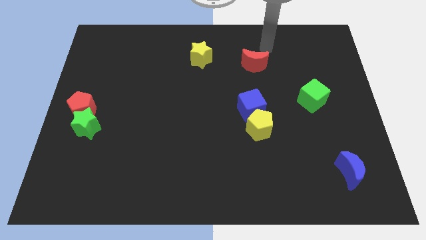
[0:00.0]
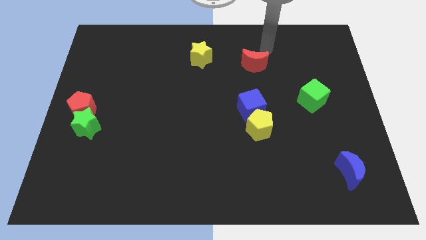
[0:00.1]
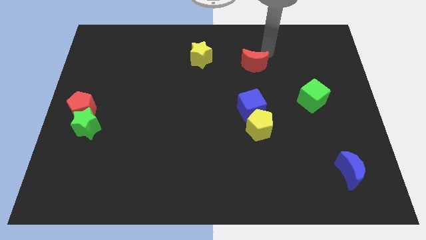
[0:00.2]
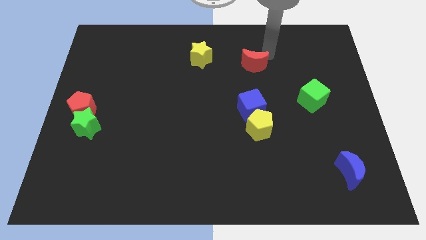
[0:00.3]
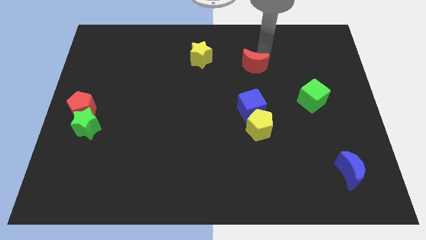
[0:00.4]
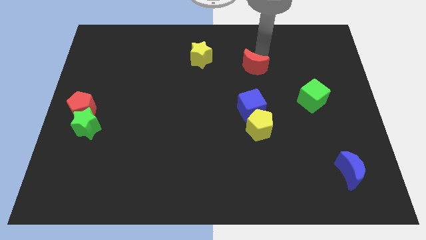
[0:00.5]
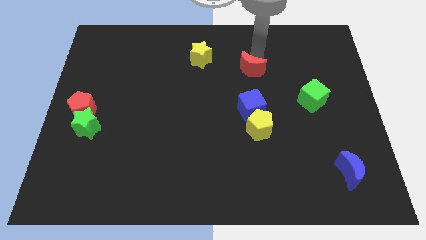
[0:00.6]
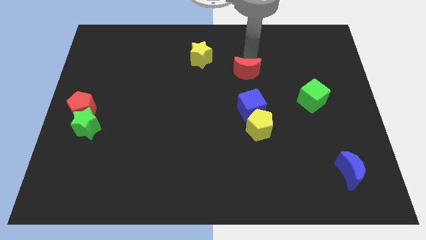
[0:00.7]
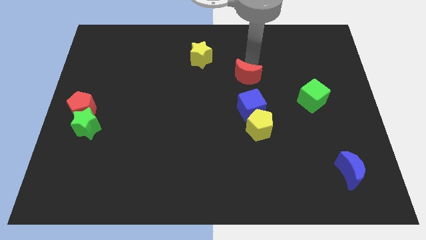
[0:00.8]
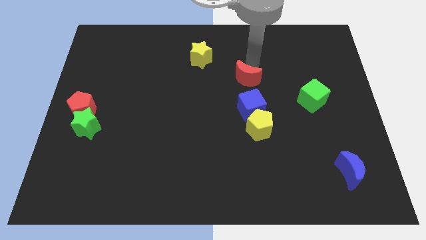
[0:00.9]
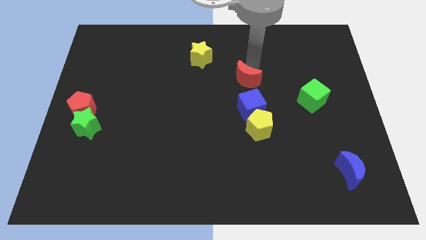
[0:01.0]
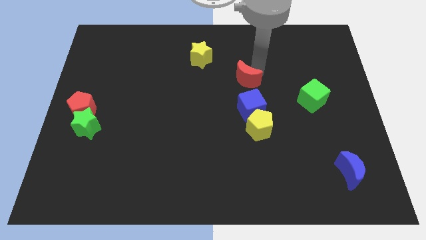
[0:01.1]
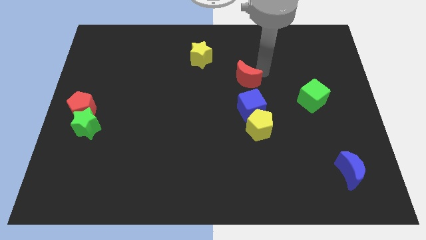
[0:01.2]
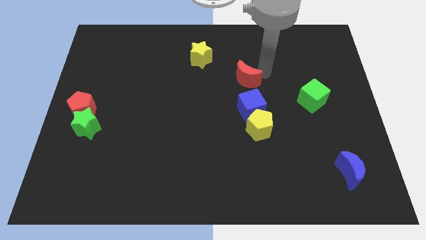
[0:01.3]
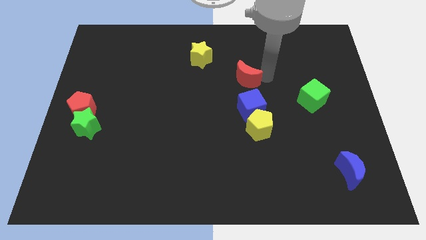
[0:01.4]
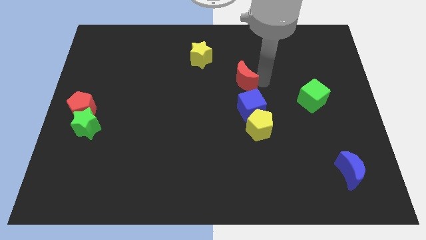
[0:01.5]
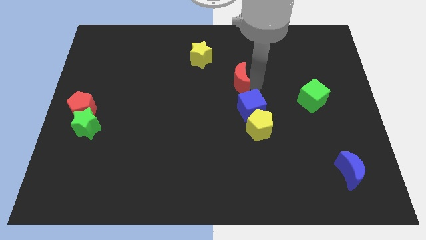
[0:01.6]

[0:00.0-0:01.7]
place the red moon above the blue cube

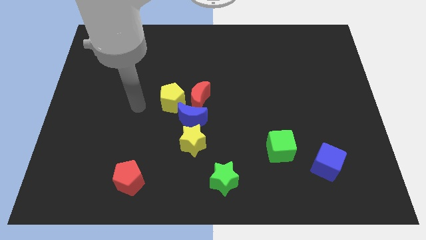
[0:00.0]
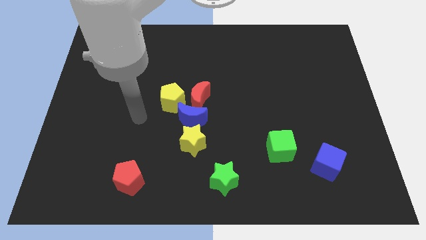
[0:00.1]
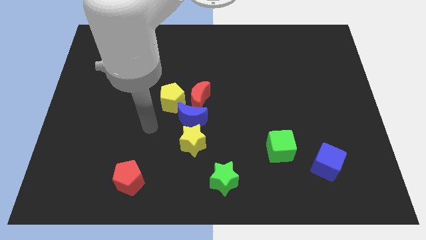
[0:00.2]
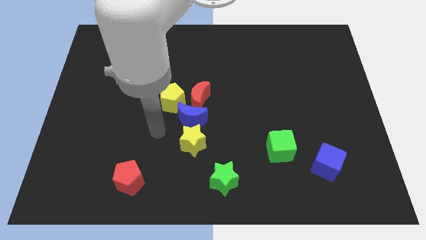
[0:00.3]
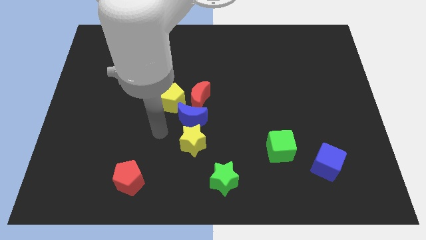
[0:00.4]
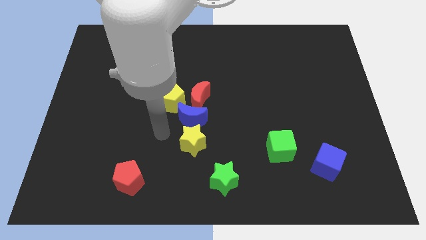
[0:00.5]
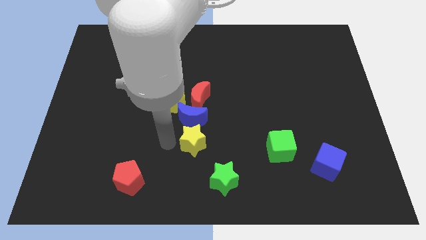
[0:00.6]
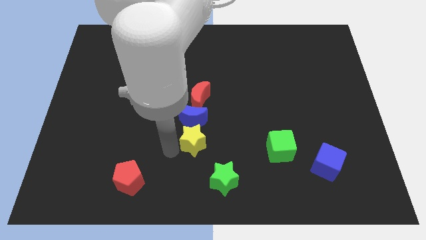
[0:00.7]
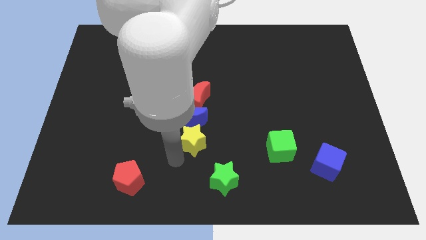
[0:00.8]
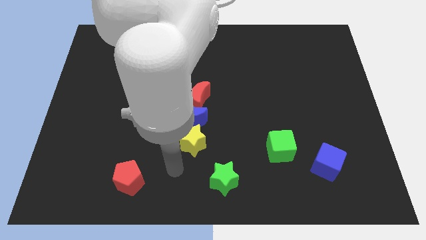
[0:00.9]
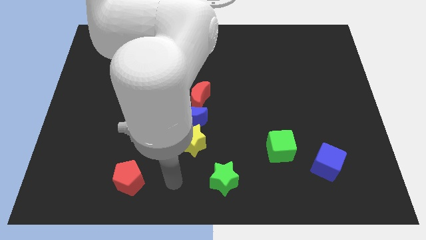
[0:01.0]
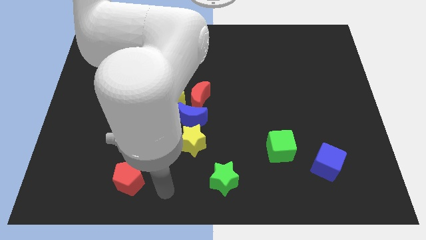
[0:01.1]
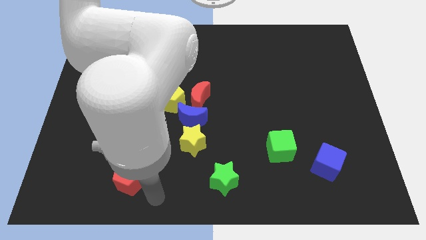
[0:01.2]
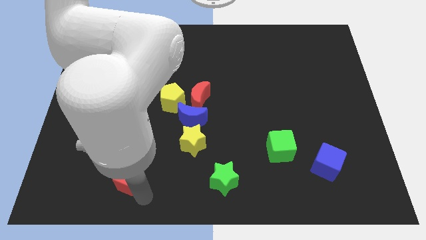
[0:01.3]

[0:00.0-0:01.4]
place your arm to the bottom right side of the red pentagon

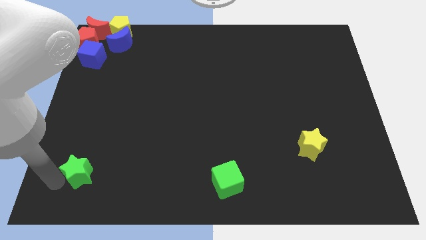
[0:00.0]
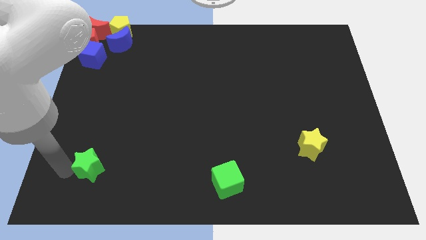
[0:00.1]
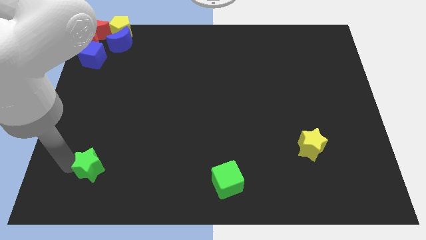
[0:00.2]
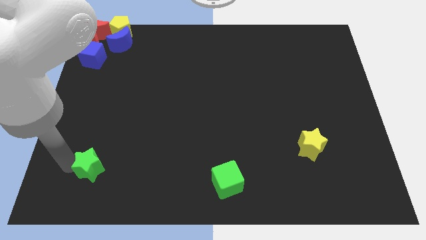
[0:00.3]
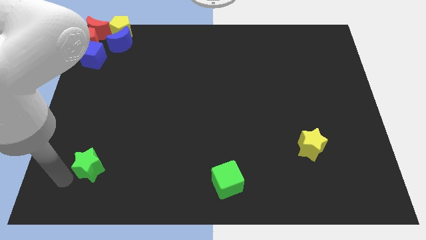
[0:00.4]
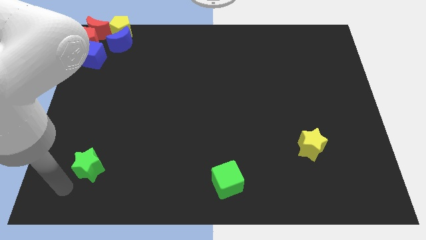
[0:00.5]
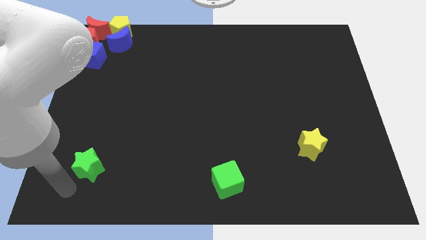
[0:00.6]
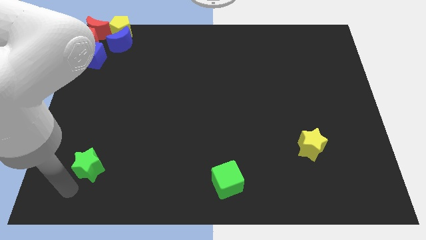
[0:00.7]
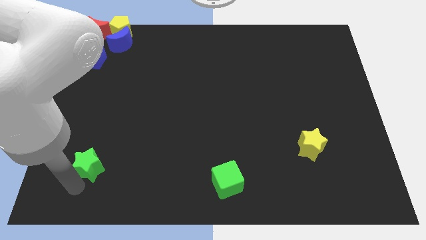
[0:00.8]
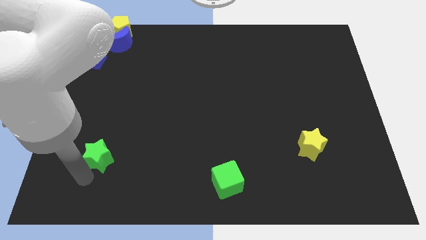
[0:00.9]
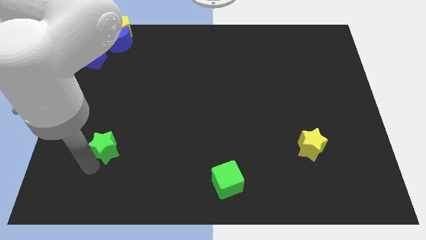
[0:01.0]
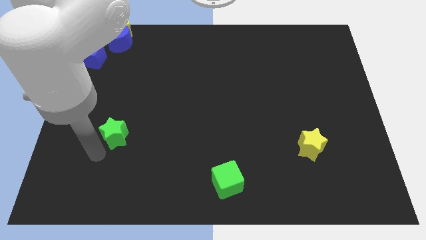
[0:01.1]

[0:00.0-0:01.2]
push the green star slightly upwards

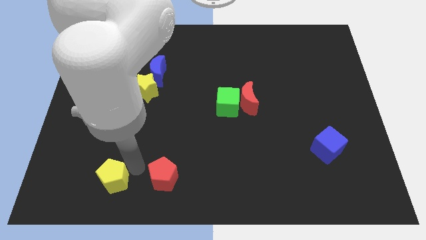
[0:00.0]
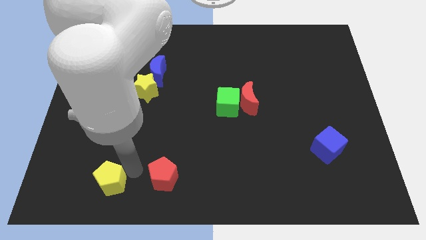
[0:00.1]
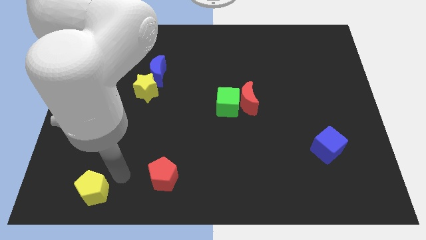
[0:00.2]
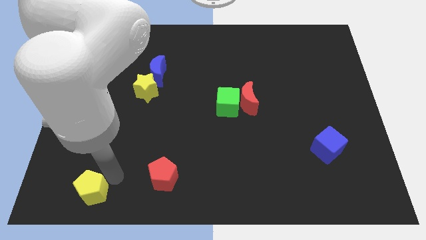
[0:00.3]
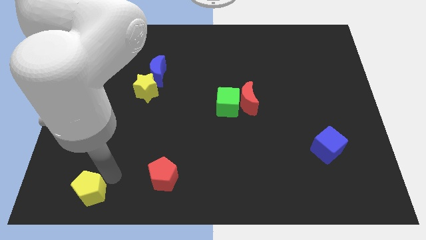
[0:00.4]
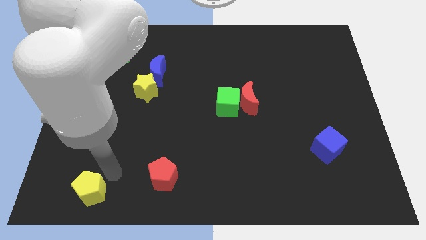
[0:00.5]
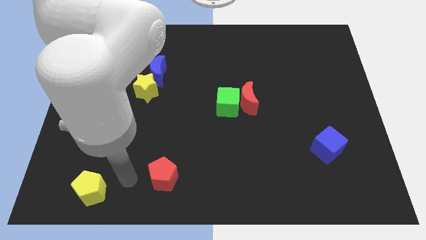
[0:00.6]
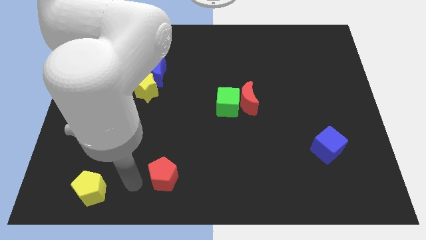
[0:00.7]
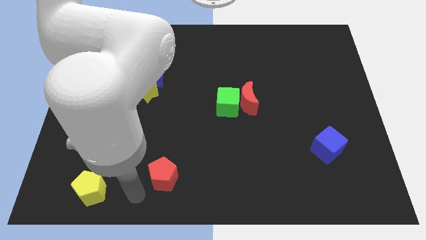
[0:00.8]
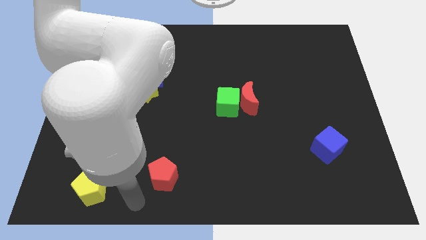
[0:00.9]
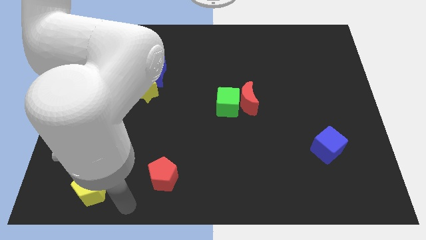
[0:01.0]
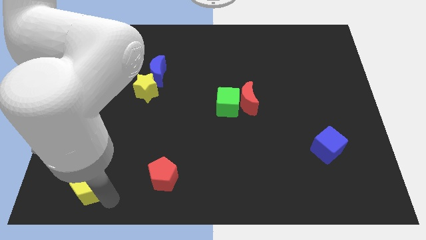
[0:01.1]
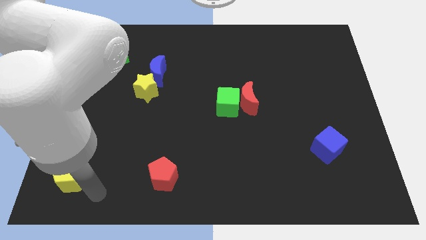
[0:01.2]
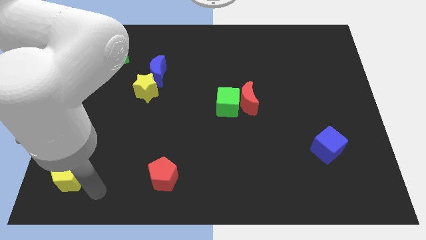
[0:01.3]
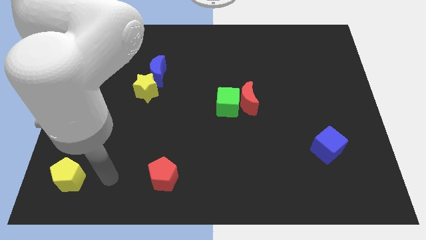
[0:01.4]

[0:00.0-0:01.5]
push the yellow pentagon towards the bottom left of the board

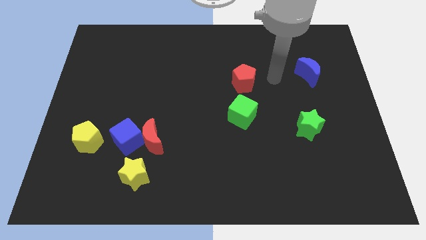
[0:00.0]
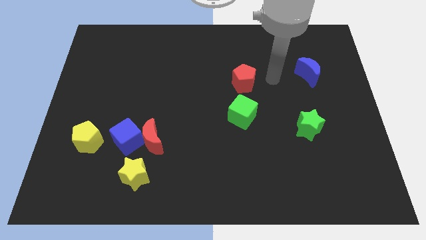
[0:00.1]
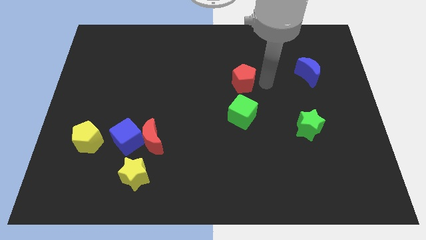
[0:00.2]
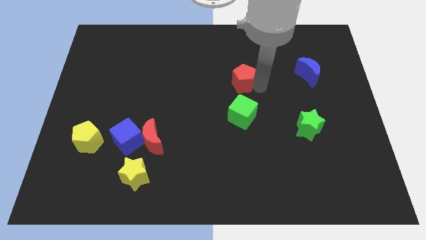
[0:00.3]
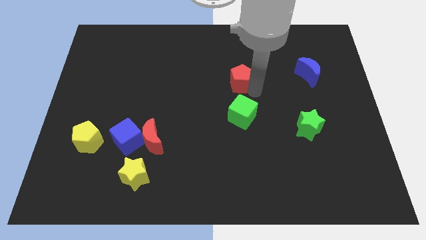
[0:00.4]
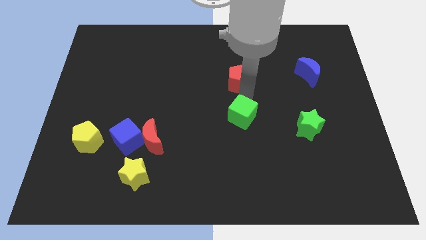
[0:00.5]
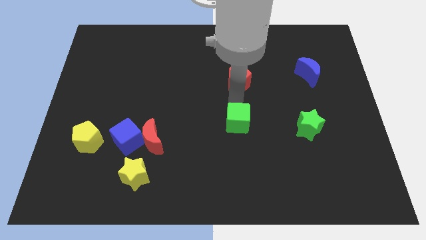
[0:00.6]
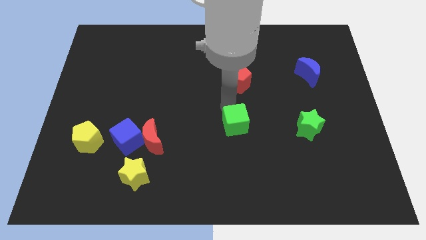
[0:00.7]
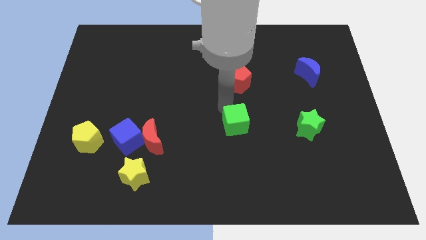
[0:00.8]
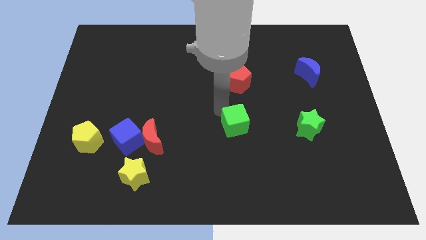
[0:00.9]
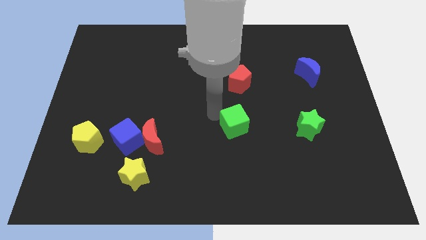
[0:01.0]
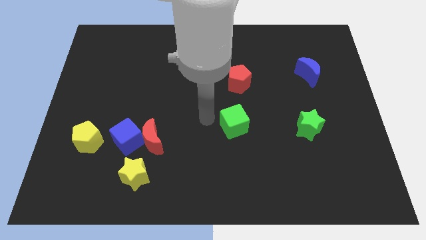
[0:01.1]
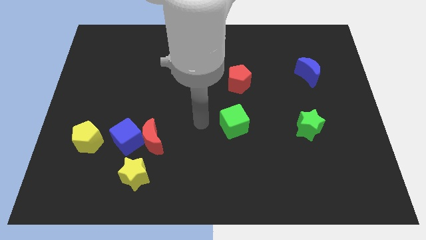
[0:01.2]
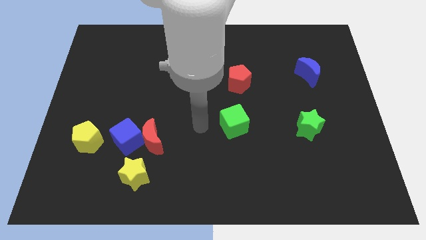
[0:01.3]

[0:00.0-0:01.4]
slightly push the red pentagon on the board

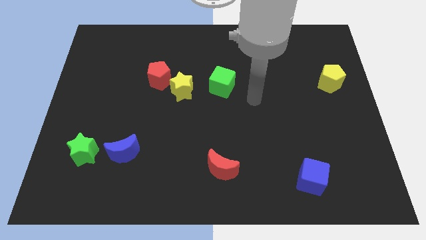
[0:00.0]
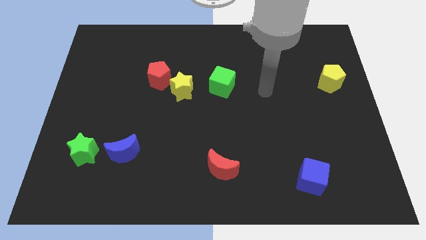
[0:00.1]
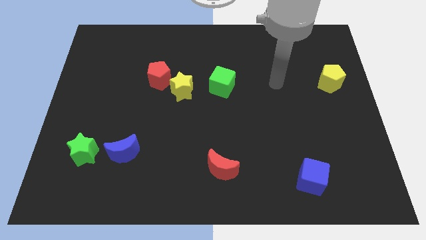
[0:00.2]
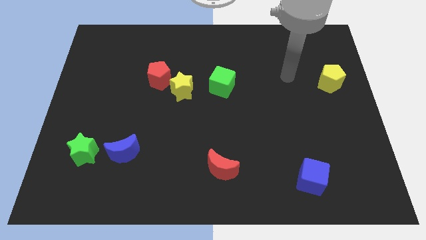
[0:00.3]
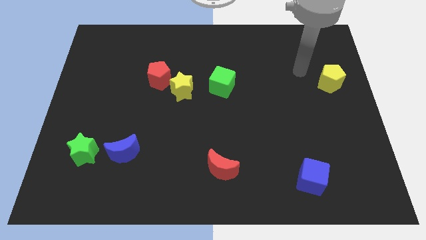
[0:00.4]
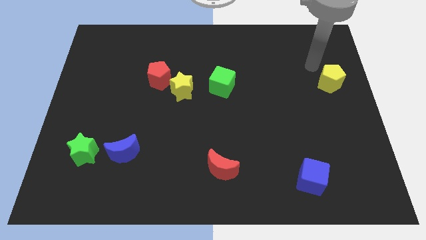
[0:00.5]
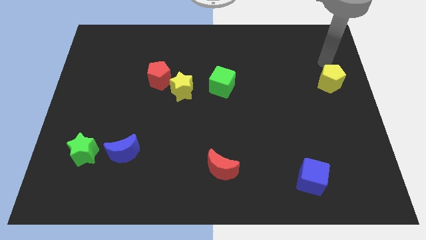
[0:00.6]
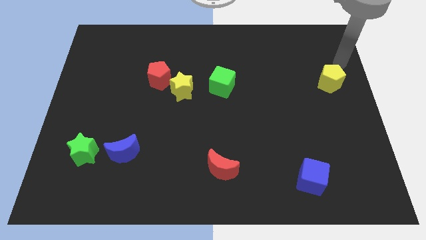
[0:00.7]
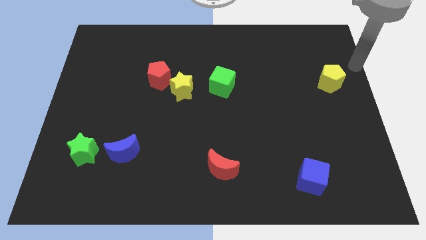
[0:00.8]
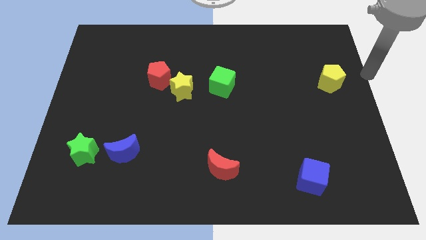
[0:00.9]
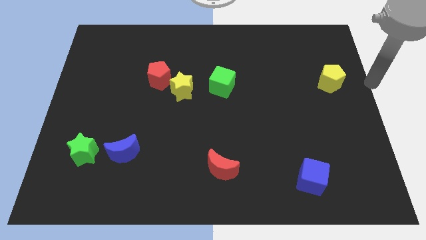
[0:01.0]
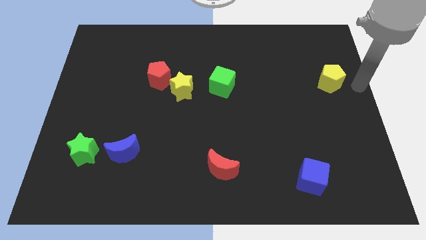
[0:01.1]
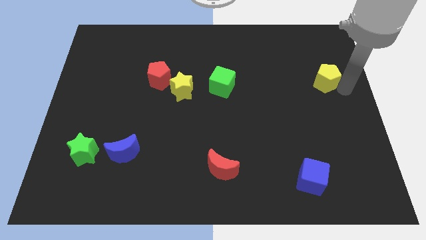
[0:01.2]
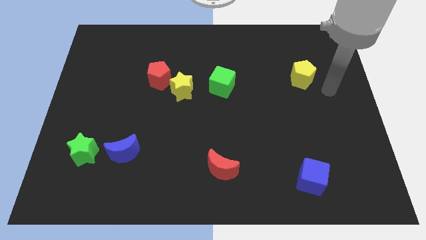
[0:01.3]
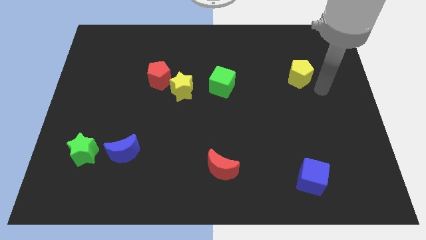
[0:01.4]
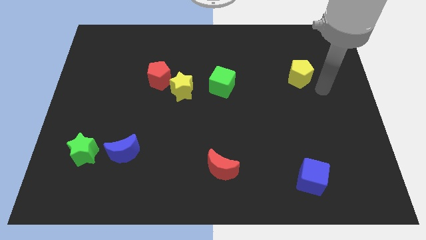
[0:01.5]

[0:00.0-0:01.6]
move your arm towards the right of the board

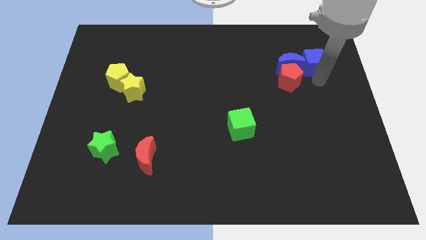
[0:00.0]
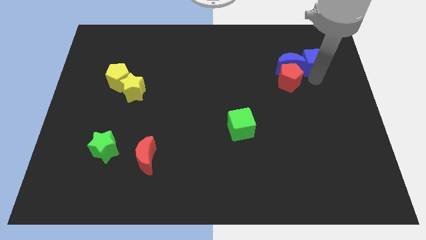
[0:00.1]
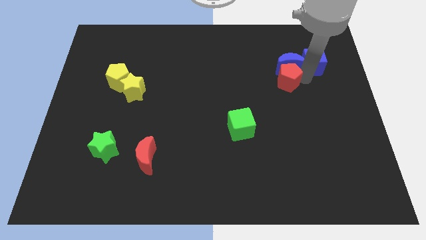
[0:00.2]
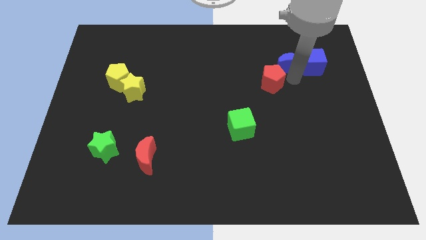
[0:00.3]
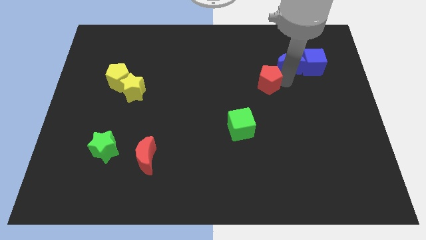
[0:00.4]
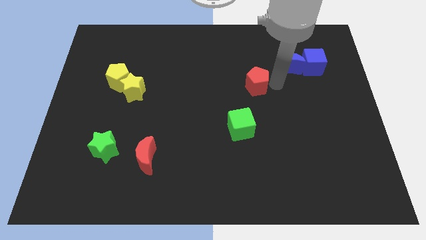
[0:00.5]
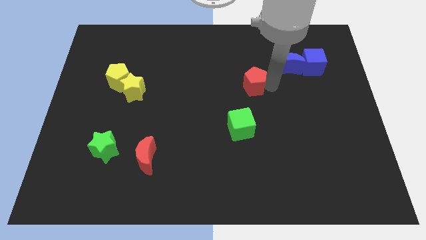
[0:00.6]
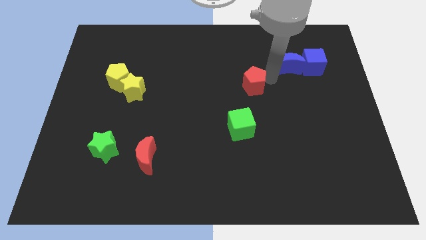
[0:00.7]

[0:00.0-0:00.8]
push the red pentagon slightly to the left
